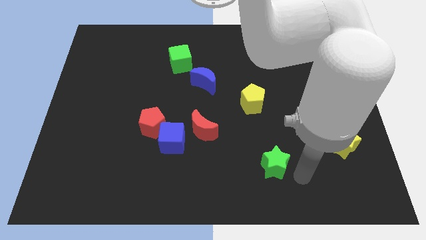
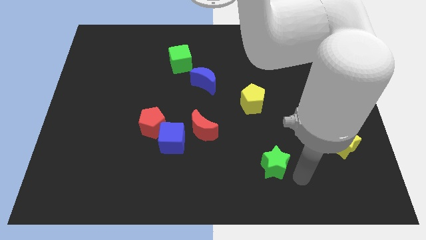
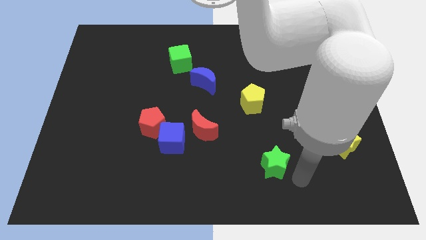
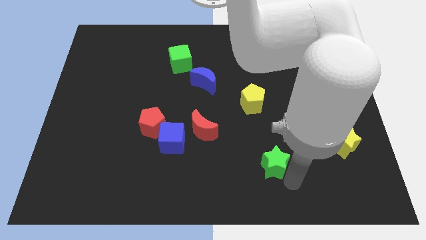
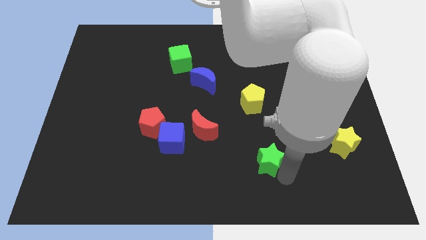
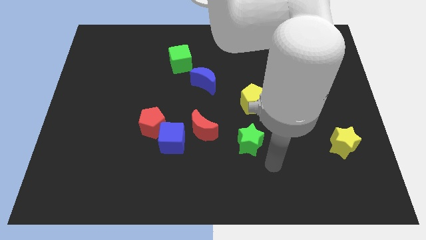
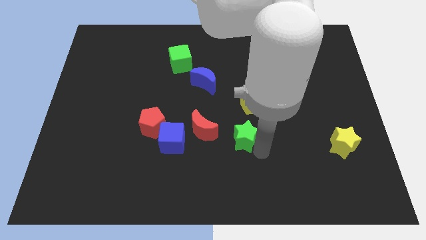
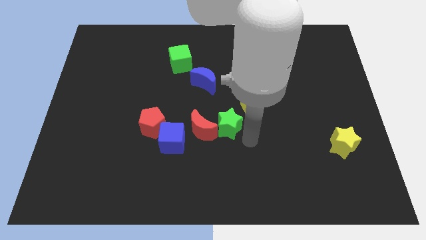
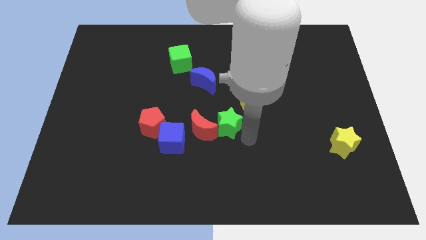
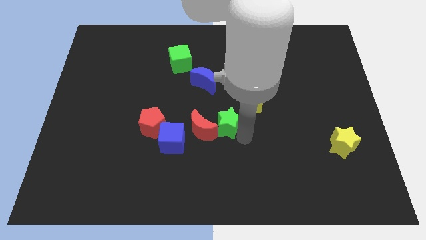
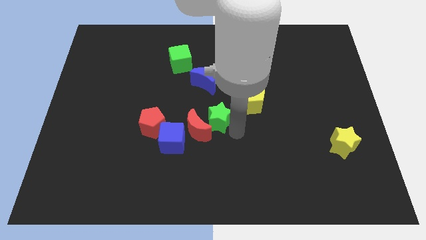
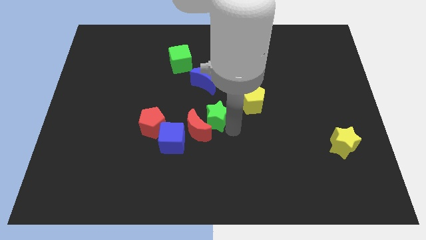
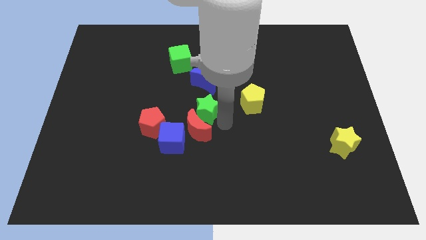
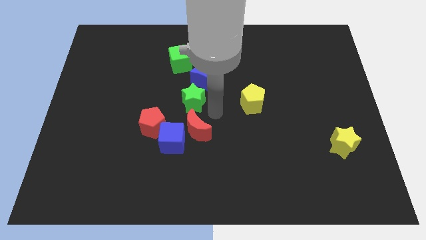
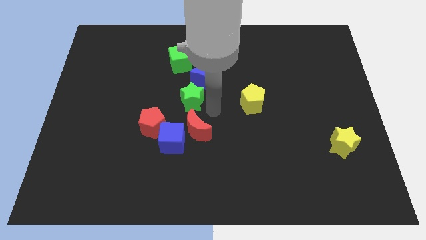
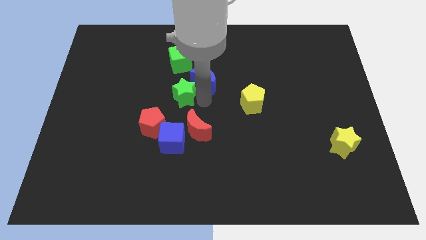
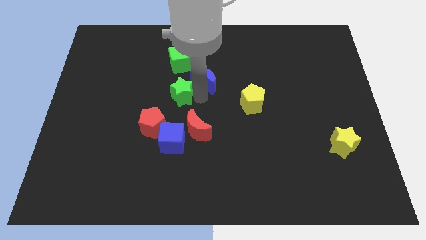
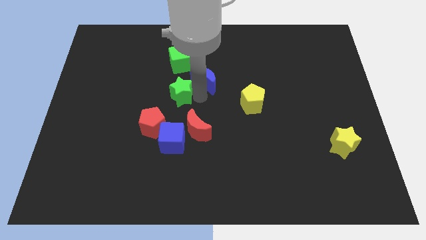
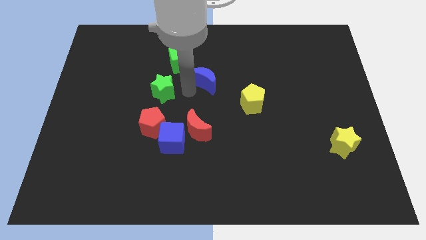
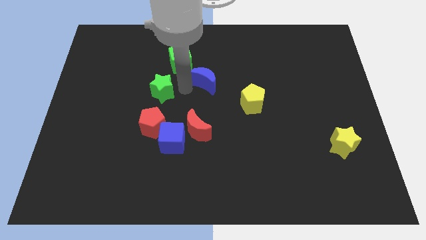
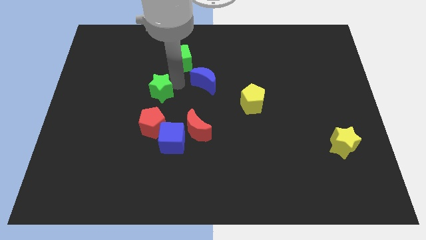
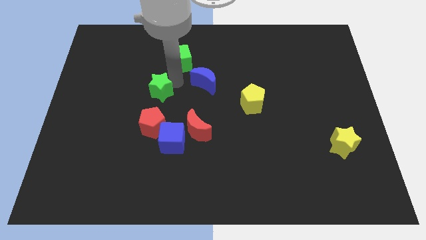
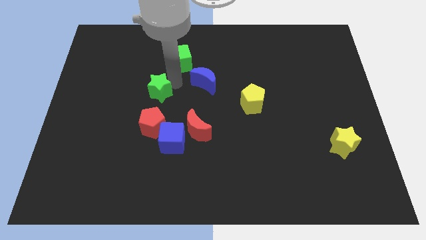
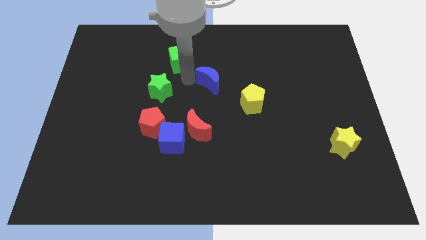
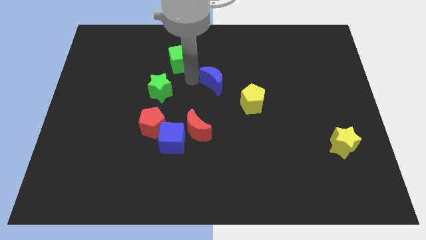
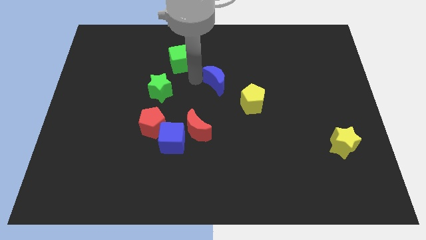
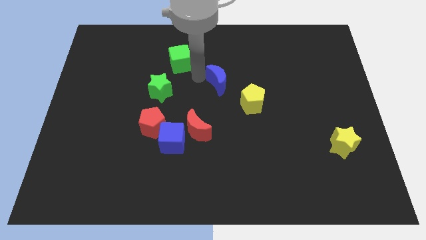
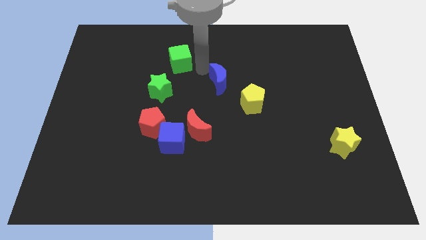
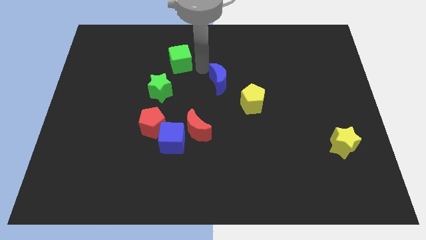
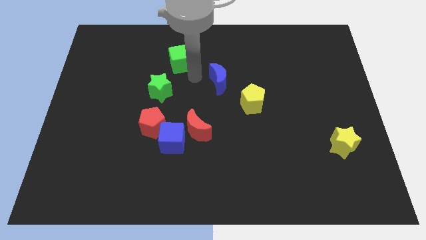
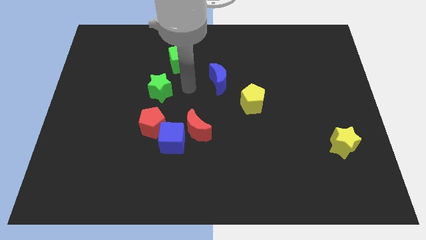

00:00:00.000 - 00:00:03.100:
move green star vertically to the top of the red pentagon

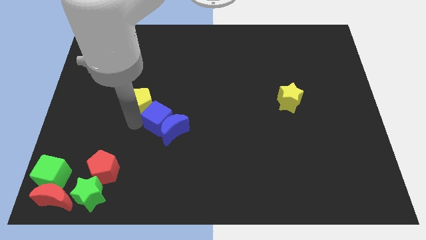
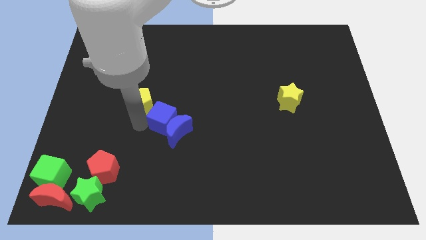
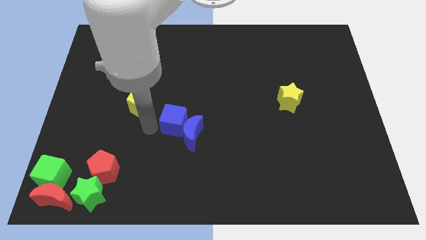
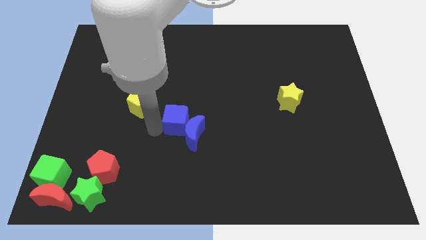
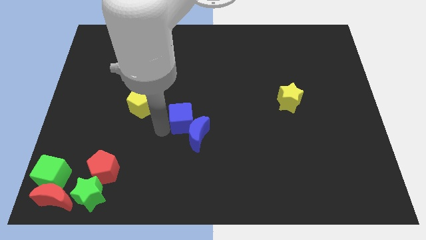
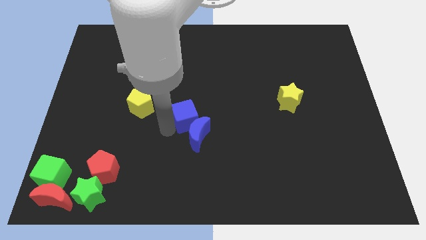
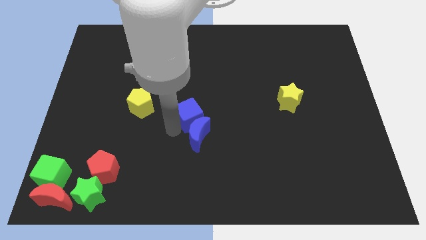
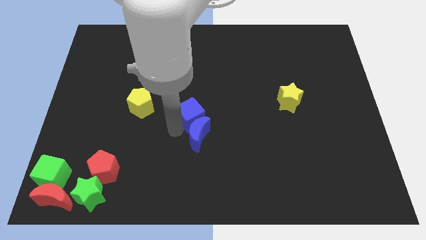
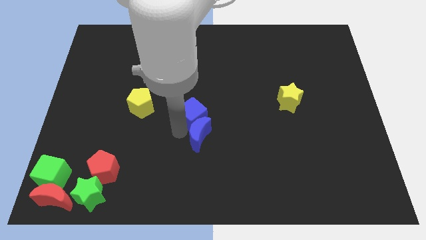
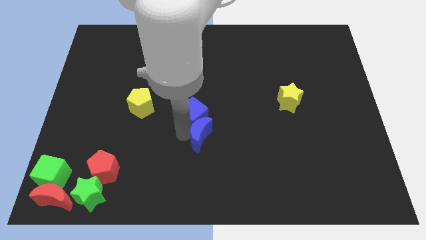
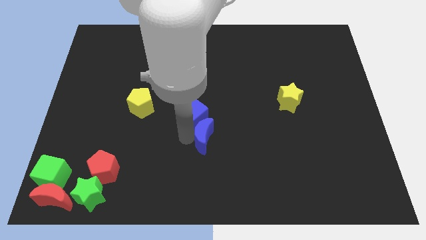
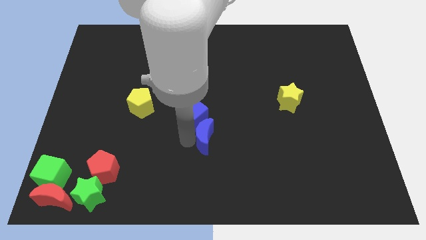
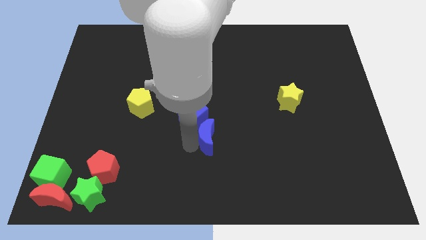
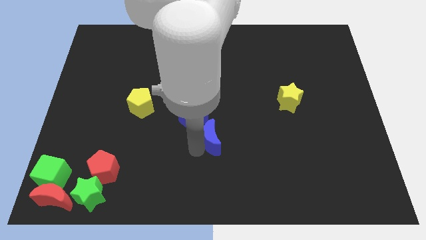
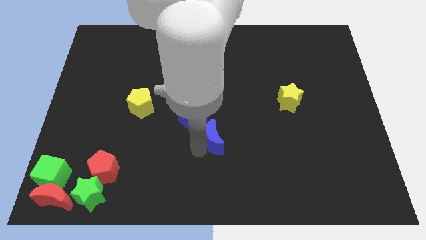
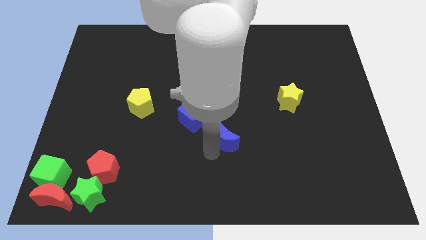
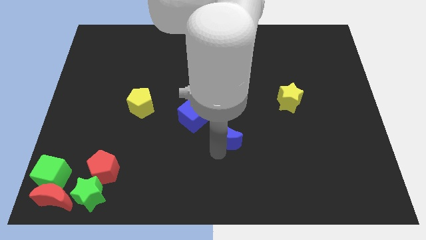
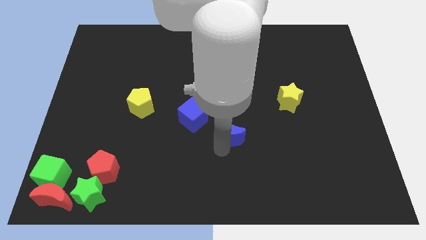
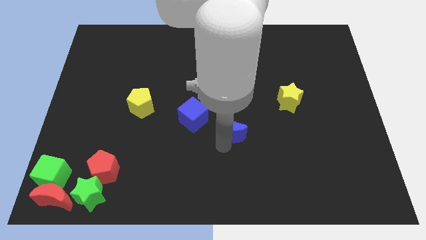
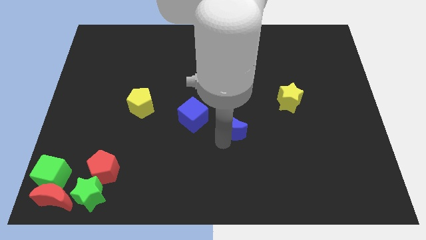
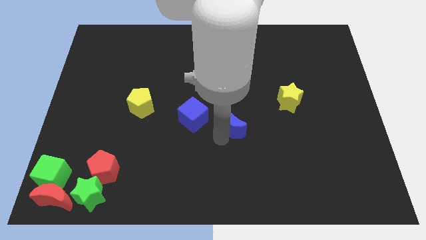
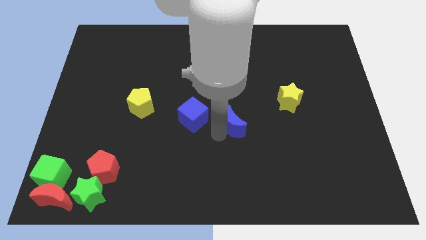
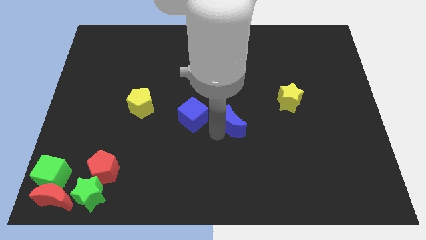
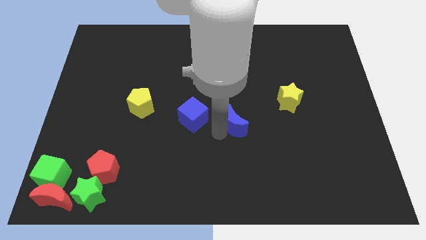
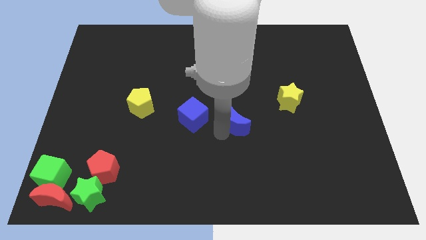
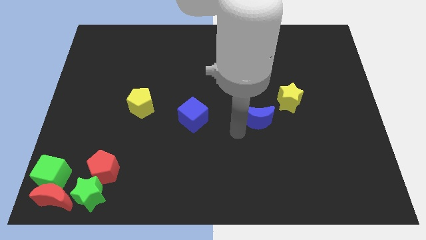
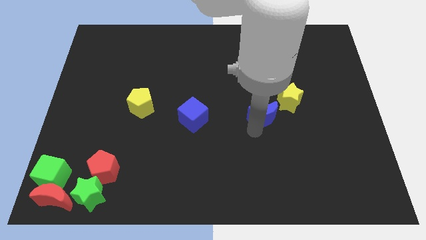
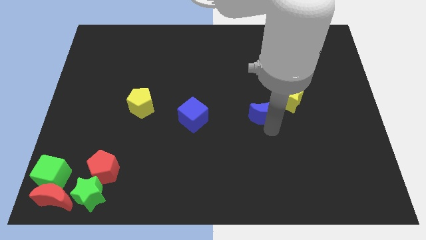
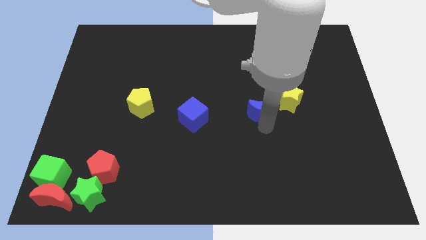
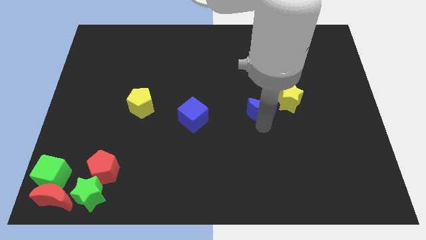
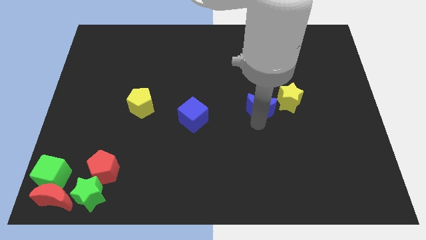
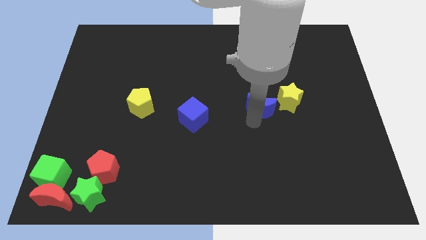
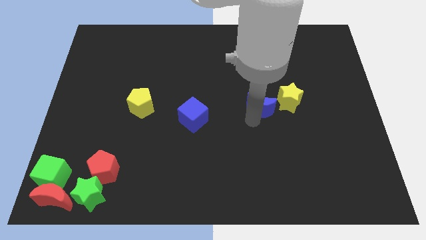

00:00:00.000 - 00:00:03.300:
move both the blue blocks diagonally on the bottom left side of the yellow star

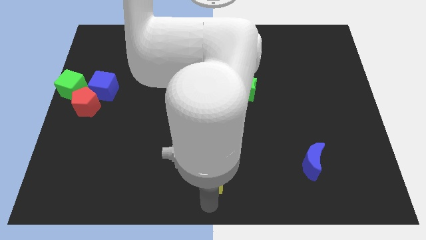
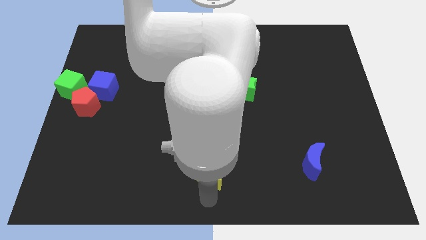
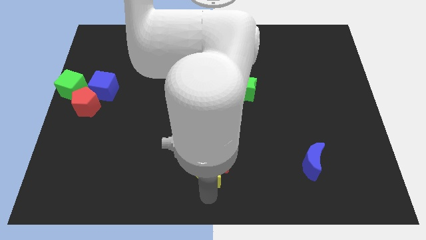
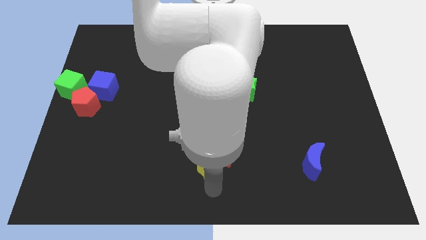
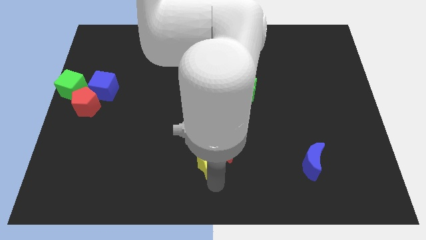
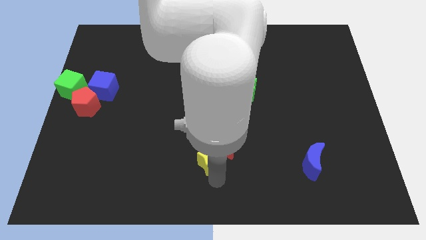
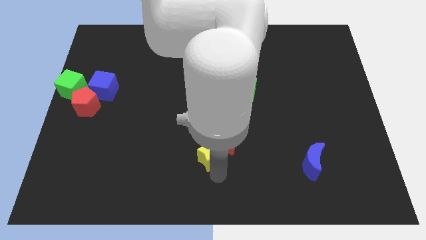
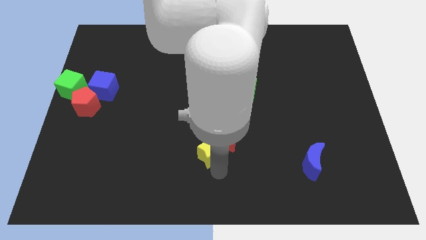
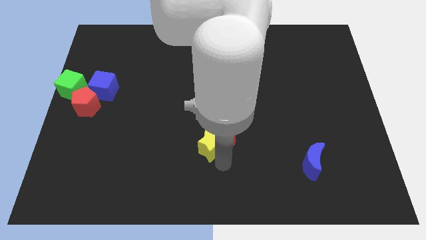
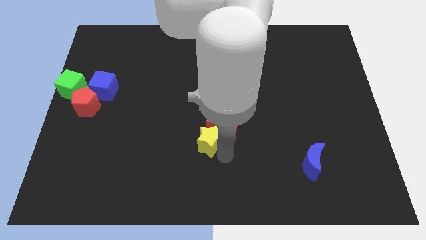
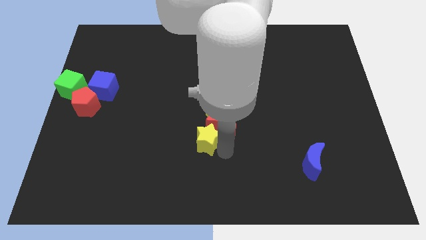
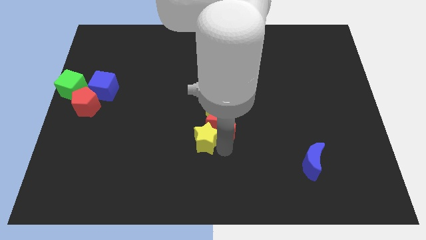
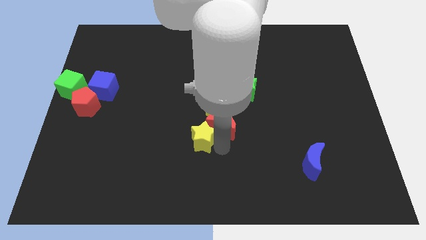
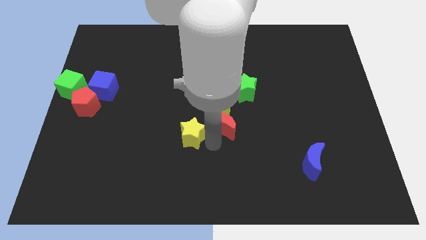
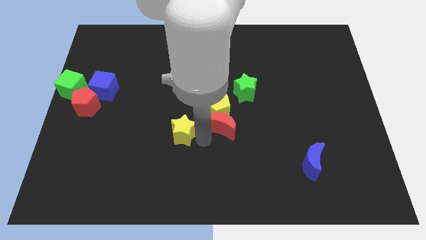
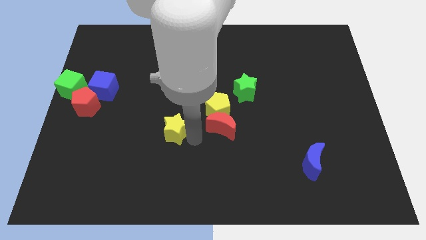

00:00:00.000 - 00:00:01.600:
place red moon to the bottom of yellow pentagon

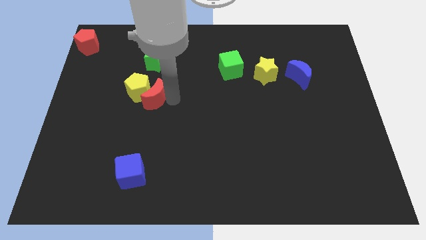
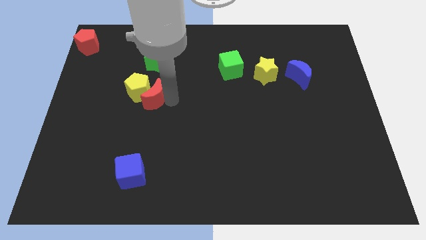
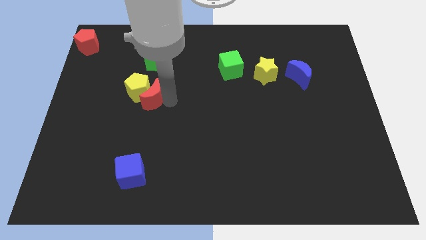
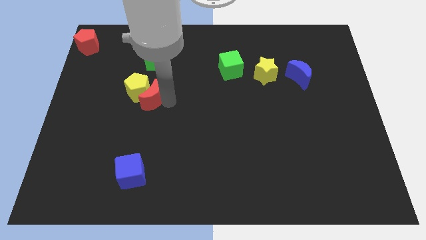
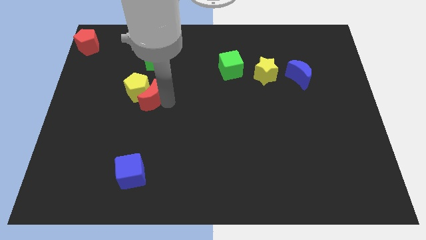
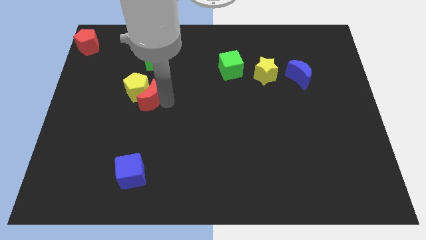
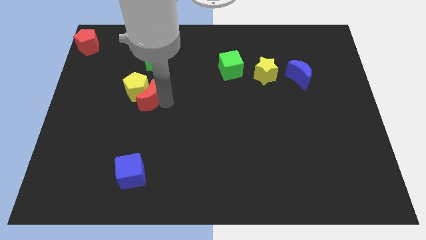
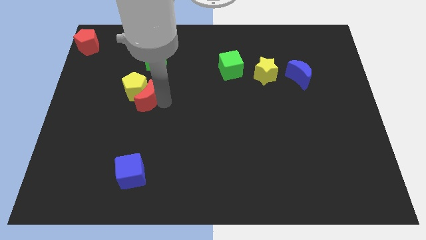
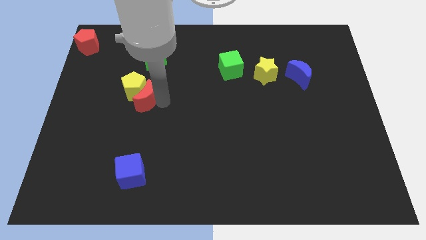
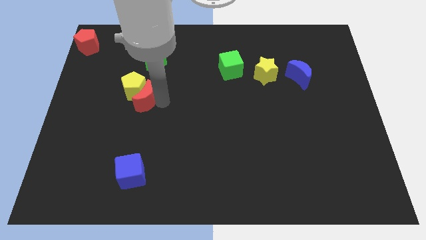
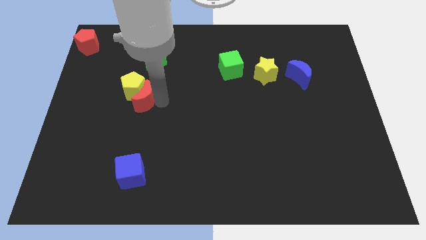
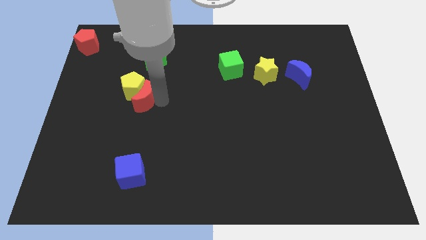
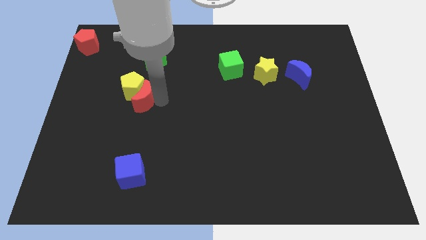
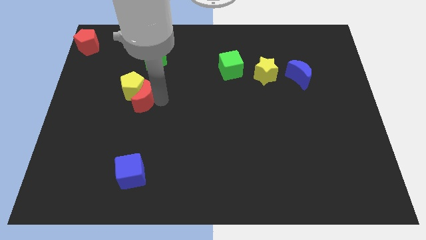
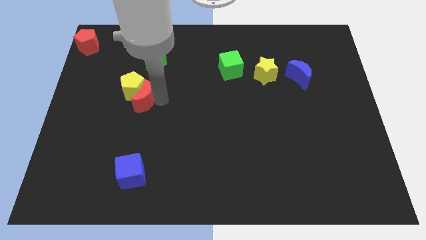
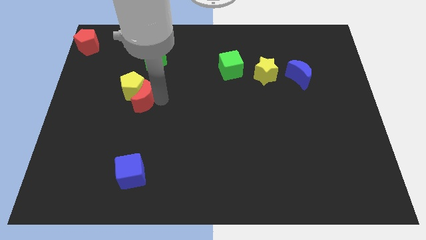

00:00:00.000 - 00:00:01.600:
move the red moon into yellow pentagon
